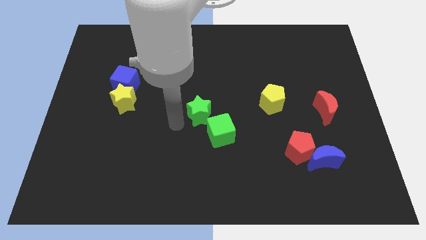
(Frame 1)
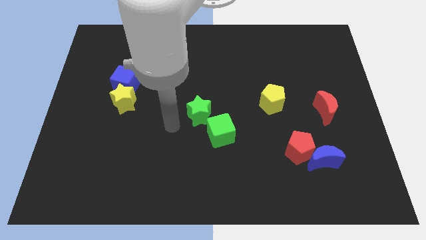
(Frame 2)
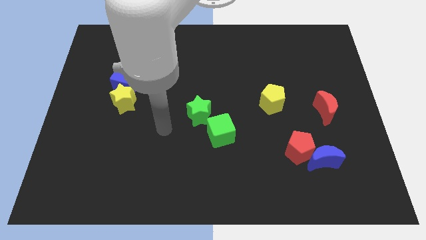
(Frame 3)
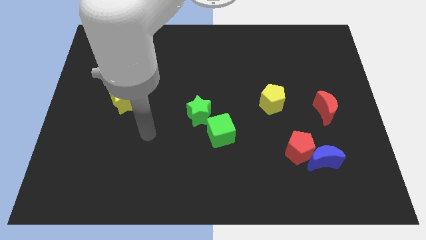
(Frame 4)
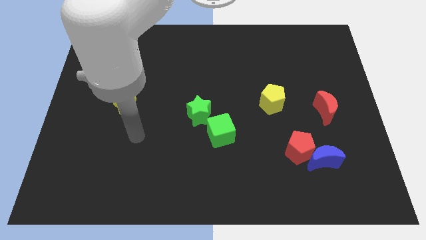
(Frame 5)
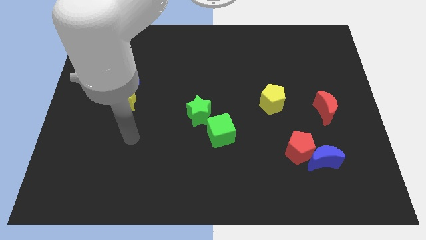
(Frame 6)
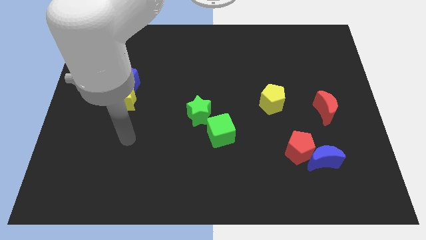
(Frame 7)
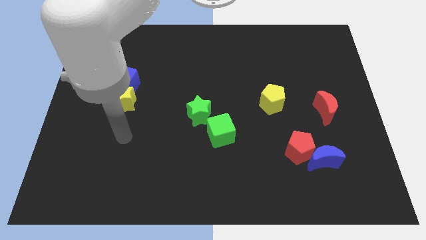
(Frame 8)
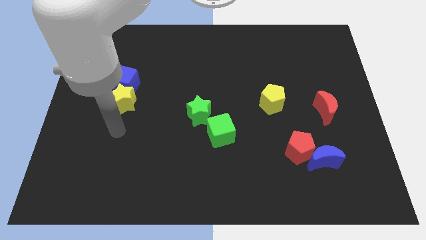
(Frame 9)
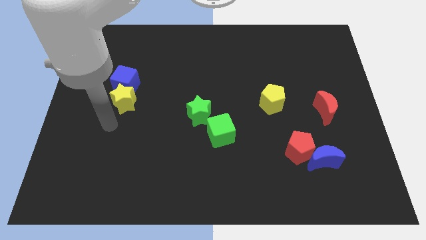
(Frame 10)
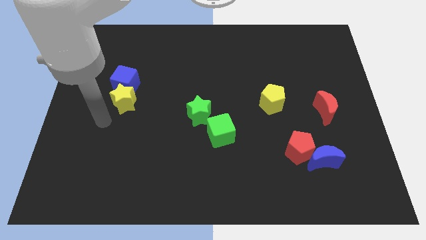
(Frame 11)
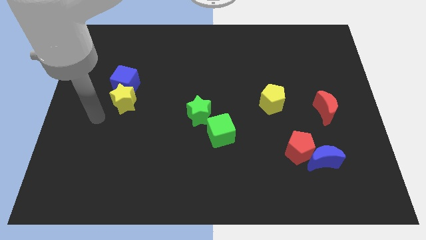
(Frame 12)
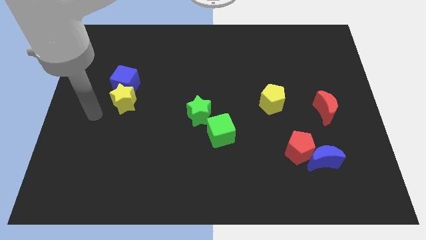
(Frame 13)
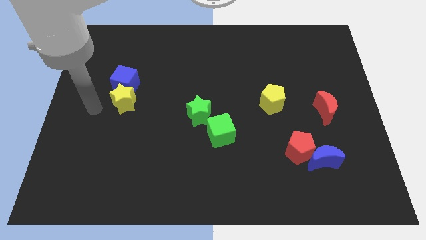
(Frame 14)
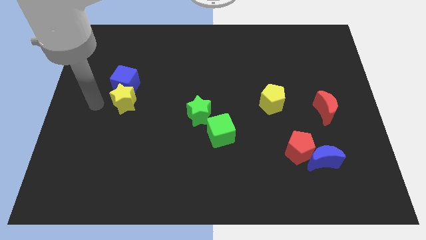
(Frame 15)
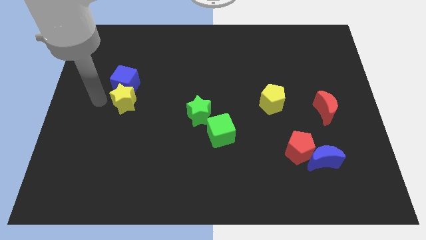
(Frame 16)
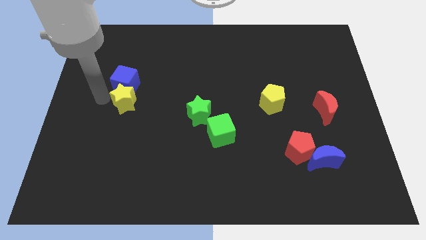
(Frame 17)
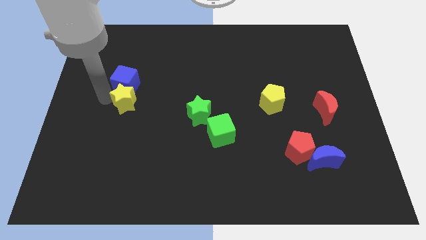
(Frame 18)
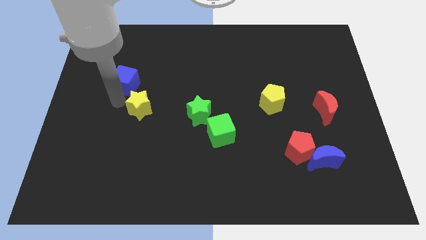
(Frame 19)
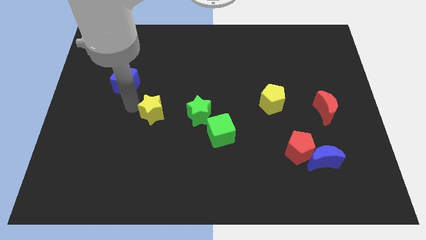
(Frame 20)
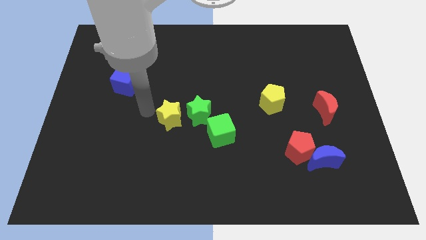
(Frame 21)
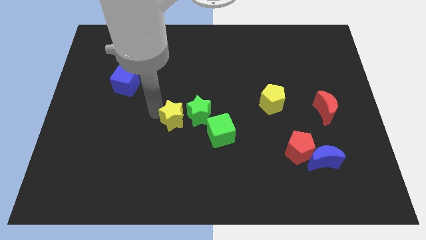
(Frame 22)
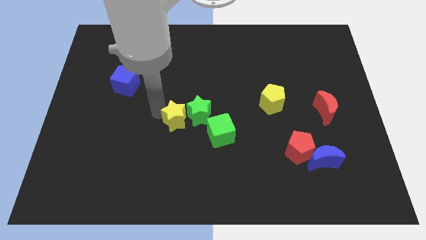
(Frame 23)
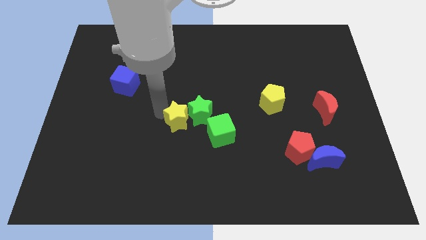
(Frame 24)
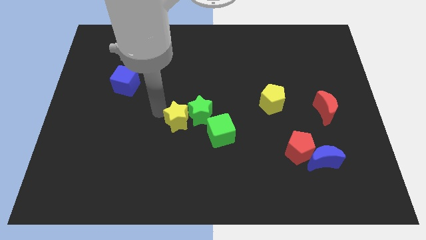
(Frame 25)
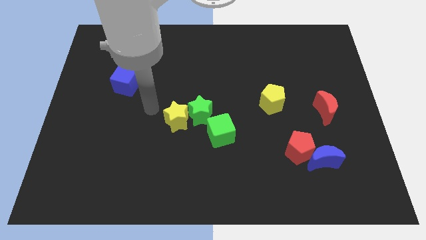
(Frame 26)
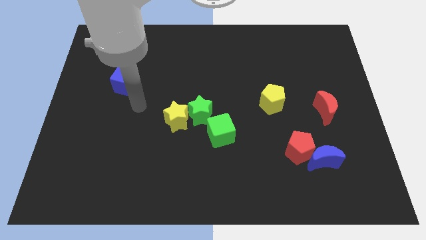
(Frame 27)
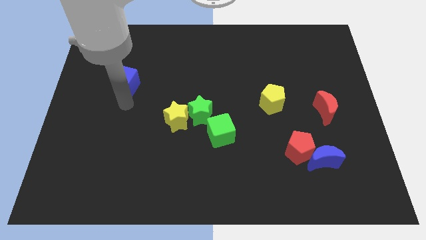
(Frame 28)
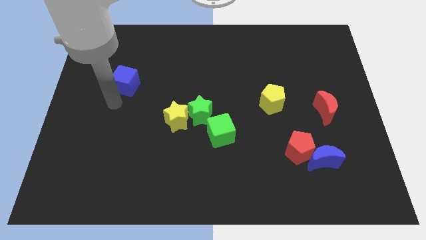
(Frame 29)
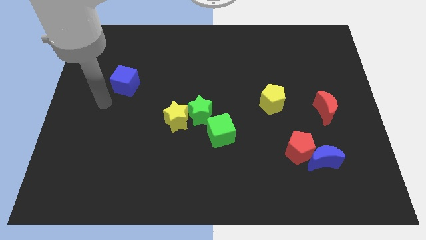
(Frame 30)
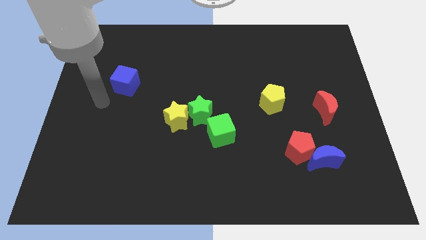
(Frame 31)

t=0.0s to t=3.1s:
move the yellow star into the green star

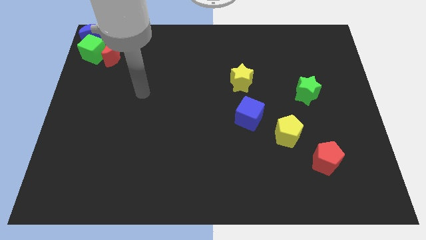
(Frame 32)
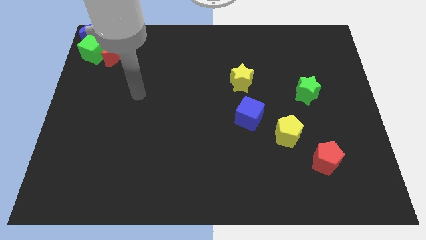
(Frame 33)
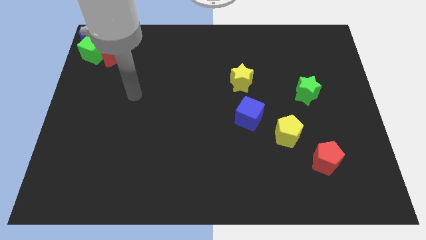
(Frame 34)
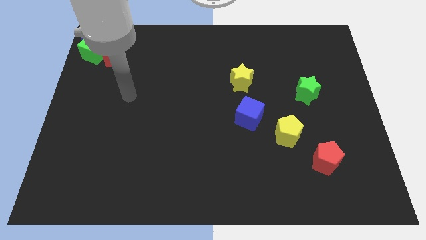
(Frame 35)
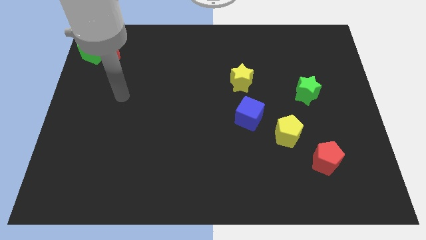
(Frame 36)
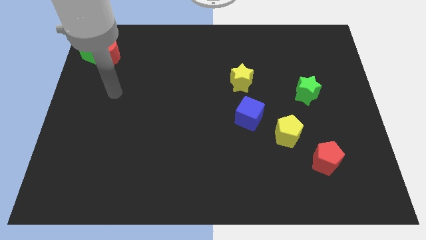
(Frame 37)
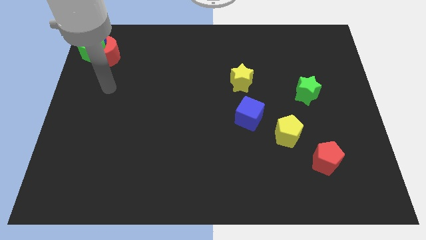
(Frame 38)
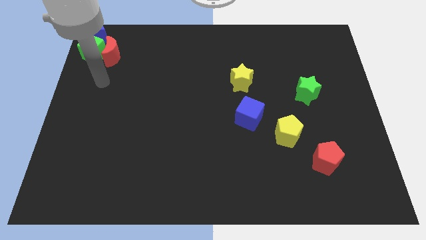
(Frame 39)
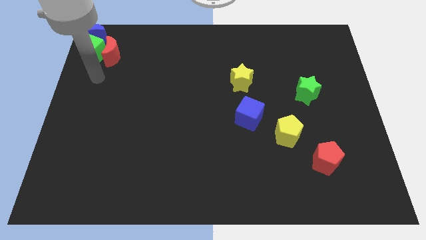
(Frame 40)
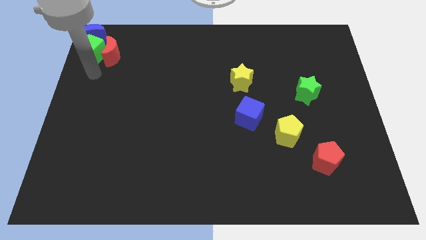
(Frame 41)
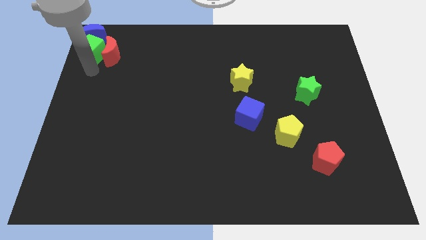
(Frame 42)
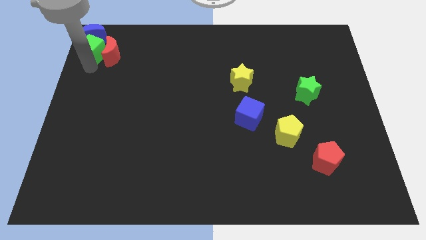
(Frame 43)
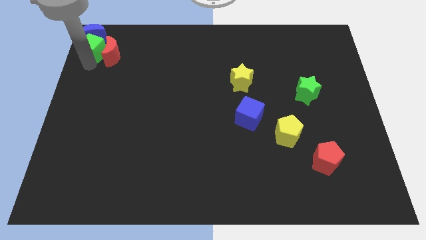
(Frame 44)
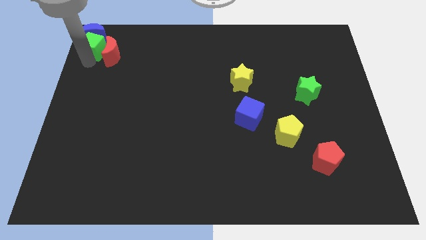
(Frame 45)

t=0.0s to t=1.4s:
place the arm below the green cube

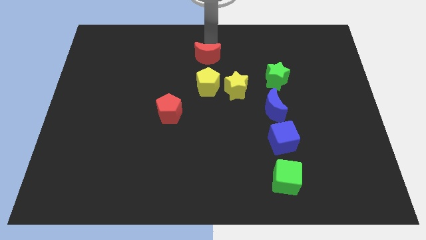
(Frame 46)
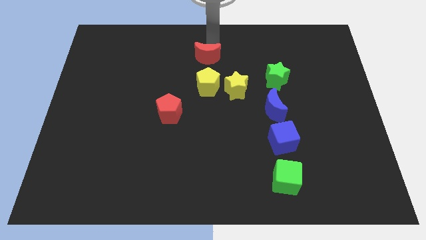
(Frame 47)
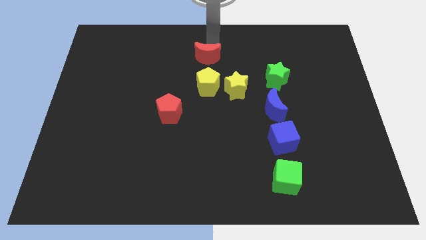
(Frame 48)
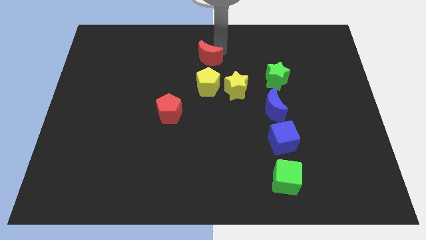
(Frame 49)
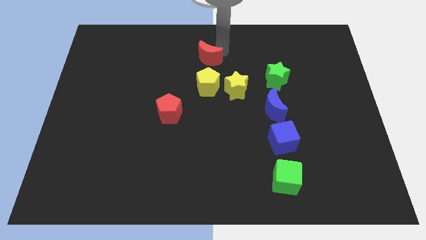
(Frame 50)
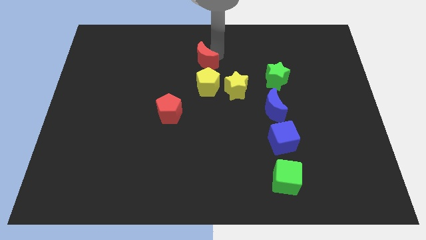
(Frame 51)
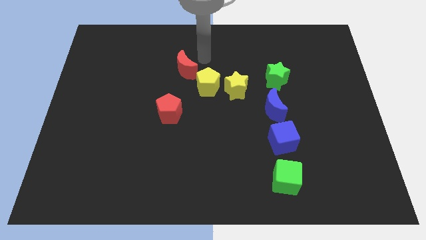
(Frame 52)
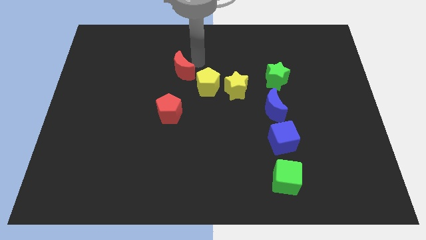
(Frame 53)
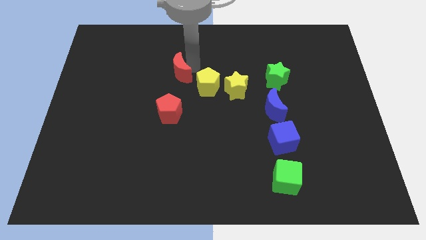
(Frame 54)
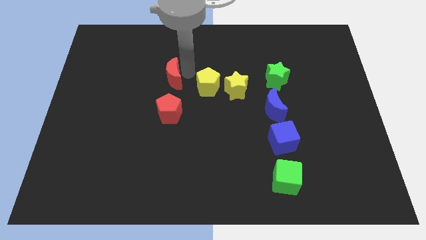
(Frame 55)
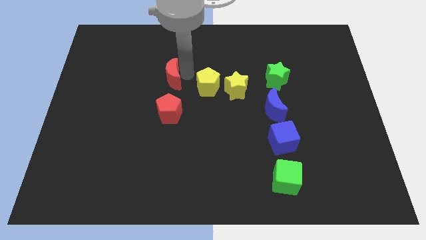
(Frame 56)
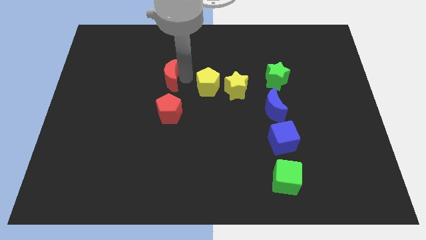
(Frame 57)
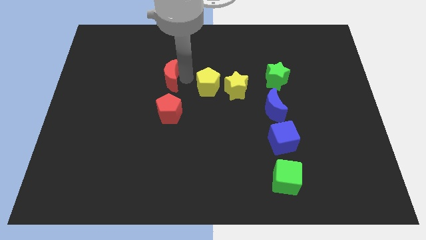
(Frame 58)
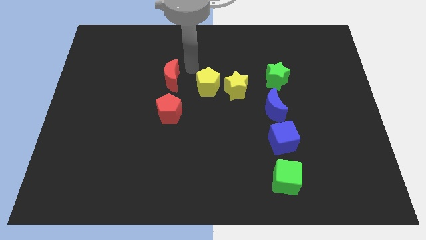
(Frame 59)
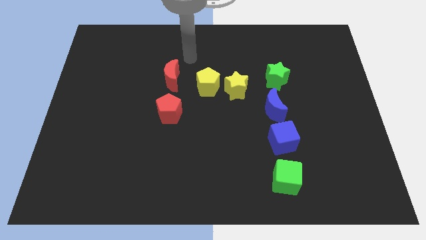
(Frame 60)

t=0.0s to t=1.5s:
place the red crescent in a horizontal line left to the yellow pentagon

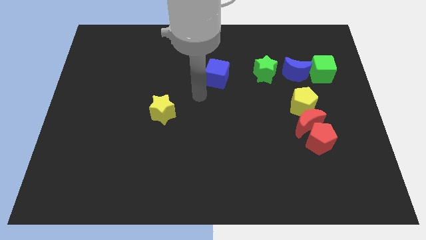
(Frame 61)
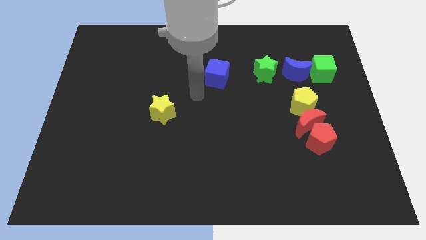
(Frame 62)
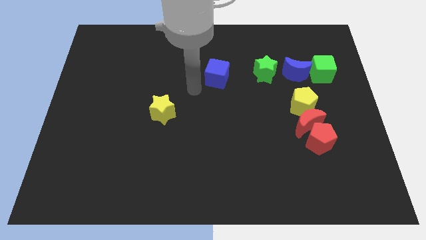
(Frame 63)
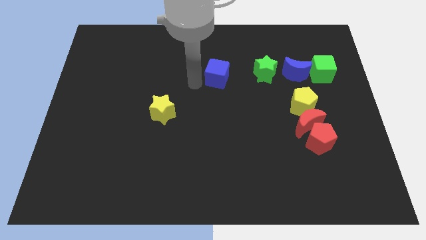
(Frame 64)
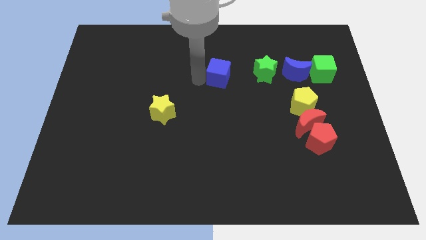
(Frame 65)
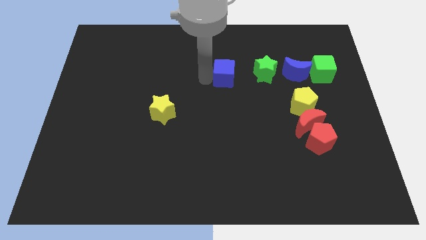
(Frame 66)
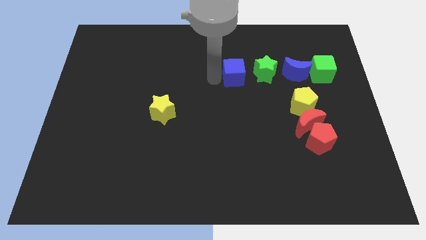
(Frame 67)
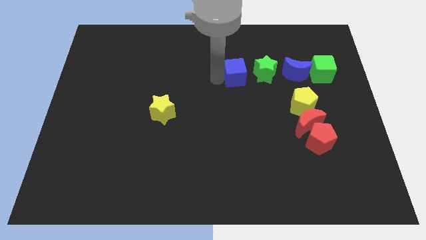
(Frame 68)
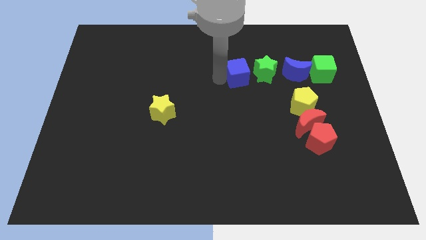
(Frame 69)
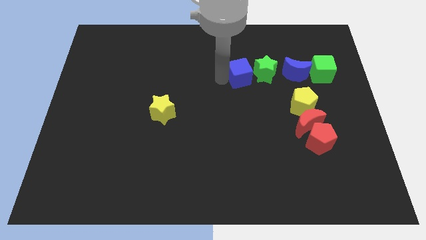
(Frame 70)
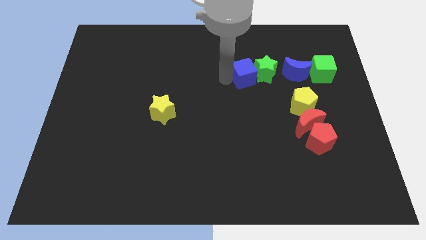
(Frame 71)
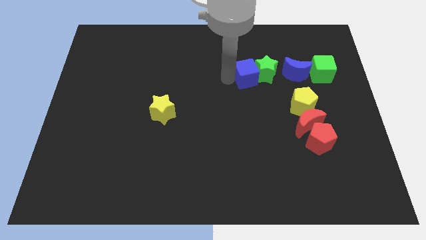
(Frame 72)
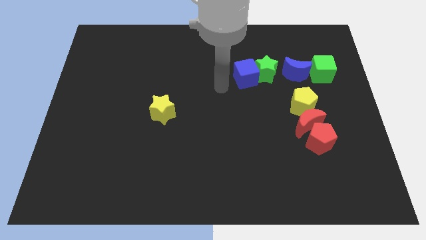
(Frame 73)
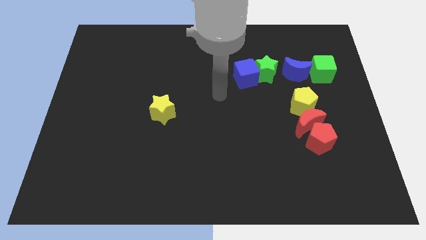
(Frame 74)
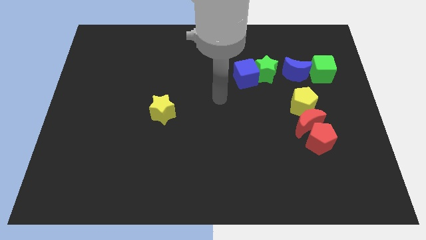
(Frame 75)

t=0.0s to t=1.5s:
place the blue cube to the left of the green star

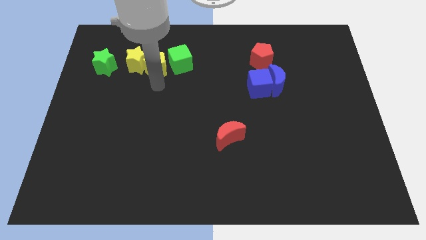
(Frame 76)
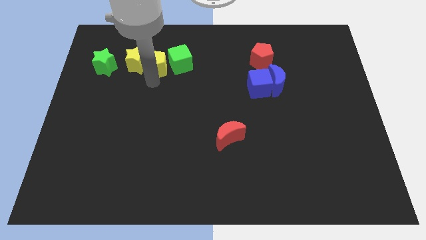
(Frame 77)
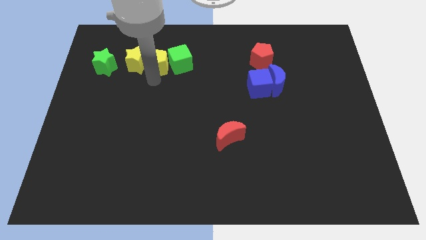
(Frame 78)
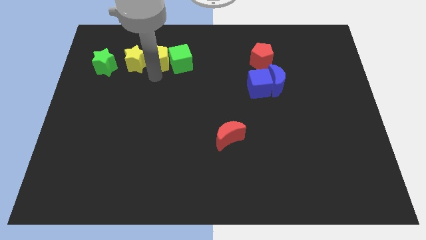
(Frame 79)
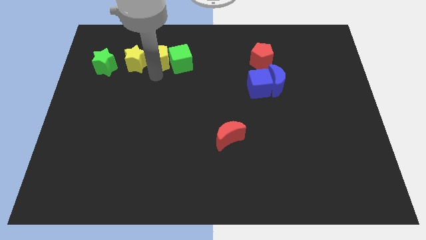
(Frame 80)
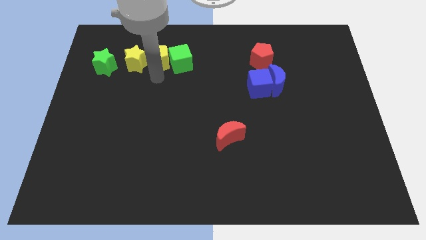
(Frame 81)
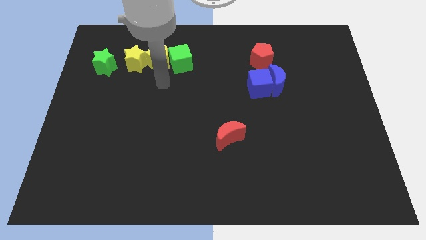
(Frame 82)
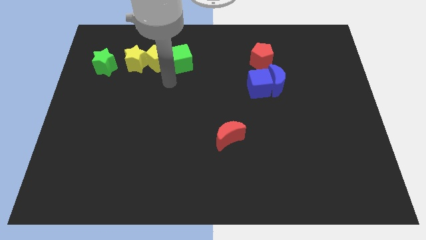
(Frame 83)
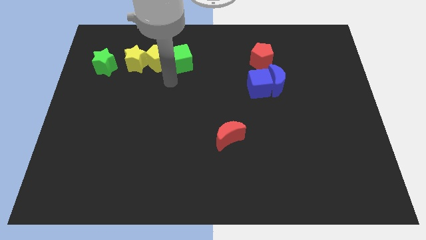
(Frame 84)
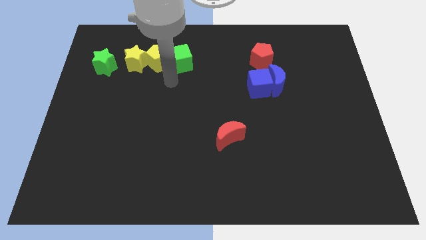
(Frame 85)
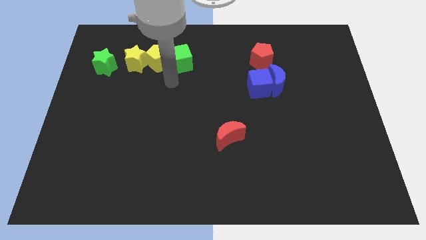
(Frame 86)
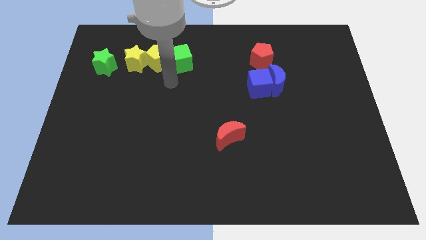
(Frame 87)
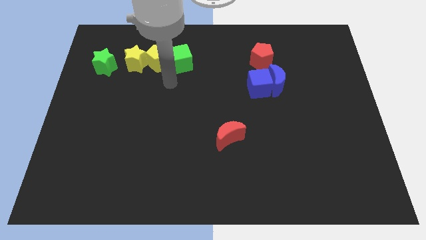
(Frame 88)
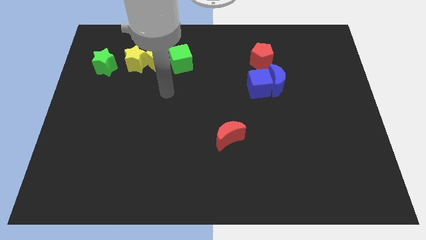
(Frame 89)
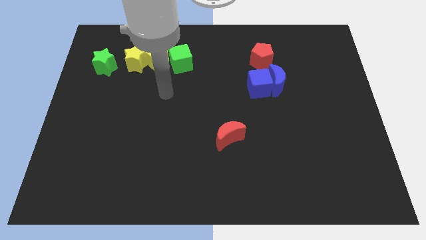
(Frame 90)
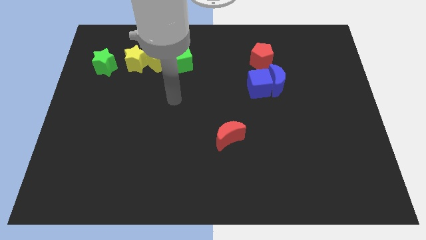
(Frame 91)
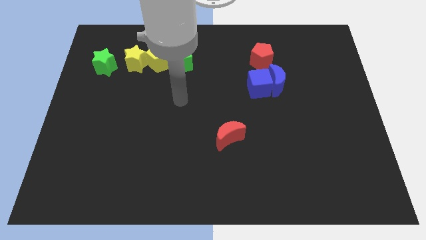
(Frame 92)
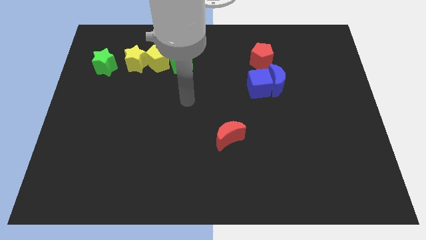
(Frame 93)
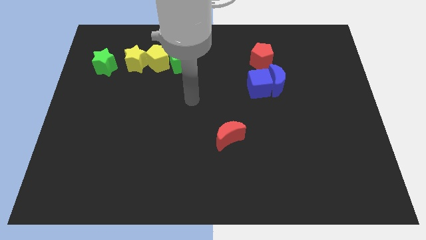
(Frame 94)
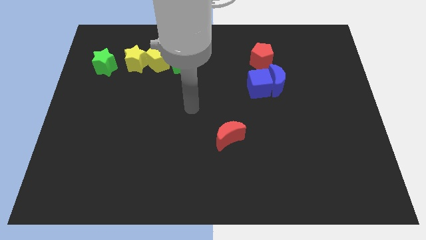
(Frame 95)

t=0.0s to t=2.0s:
move away from the yellow pentagon
